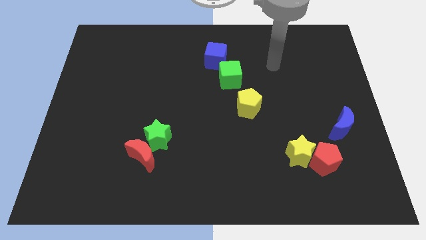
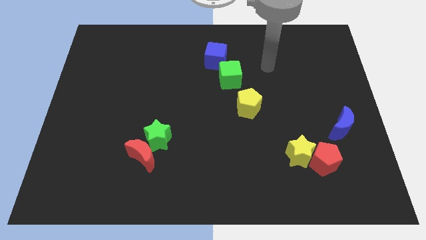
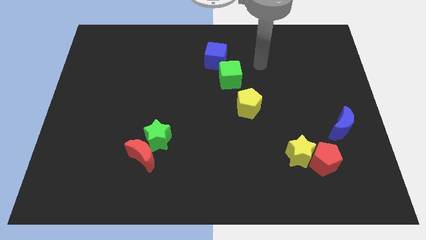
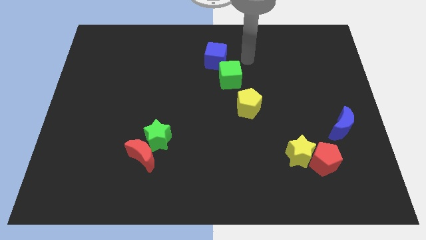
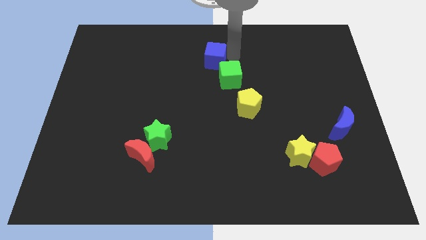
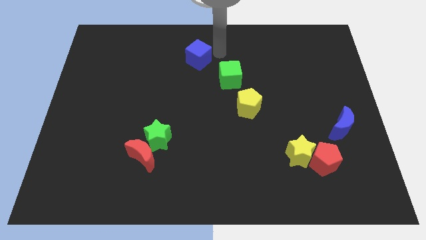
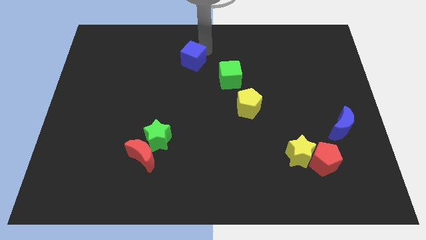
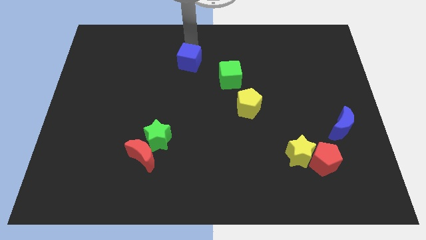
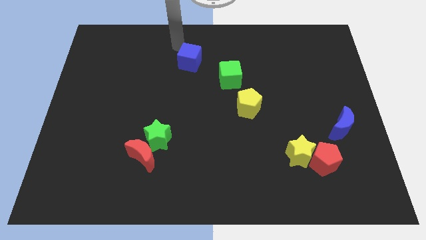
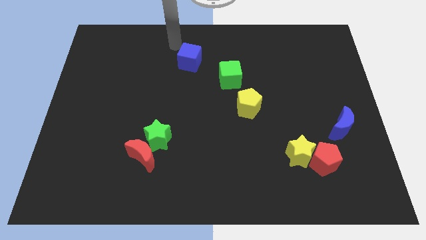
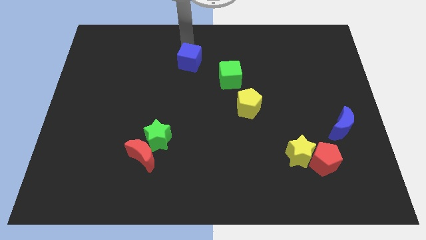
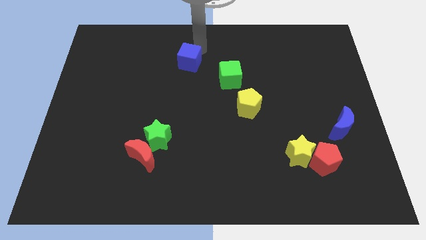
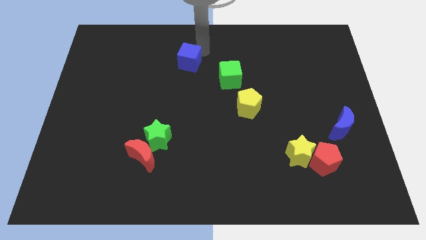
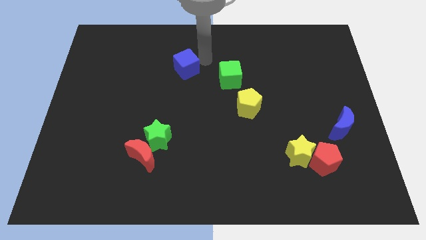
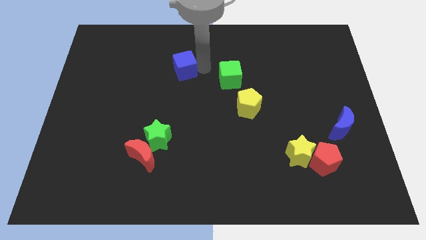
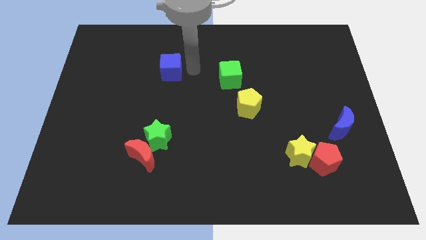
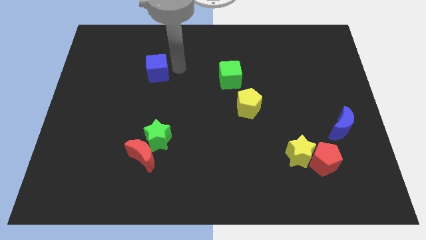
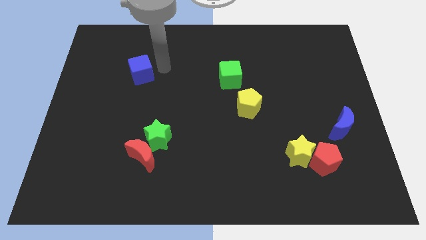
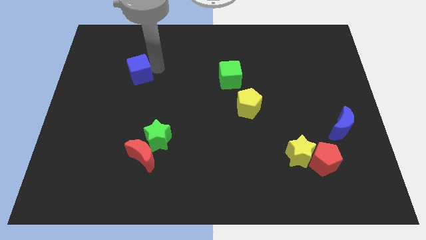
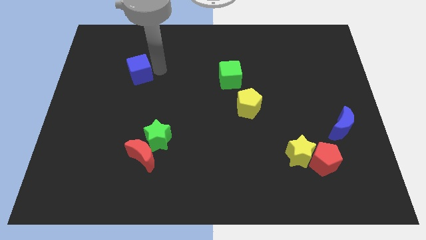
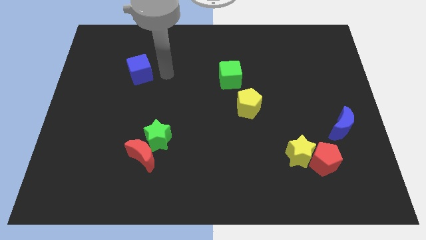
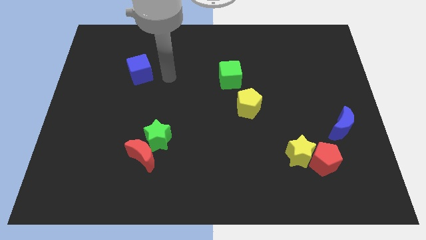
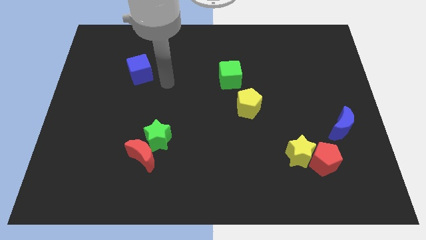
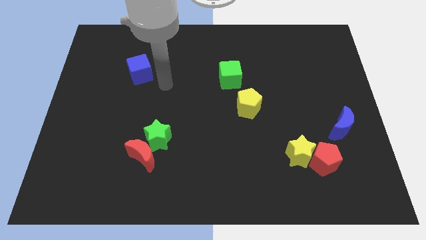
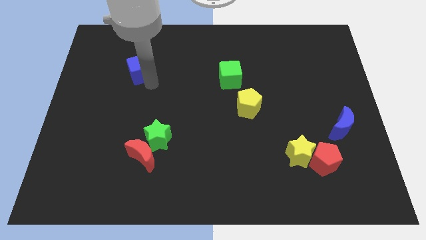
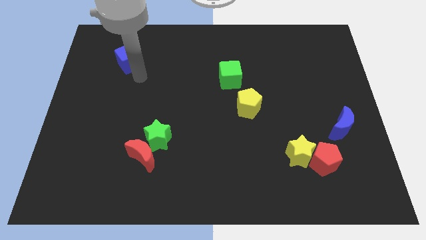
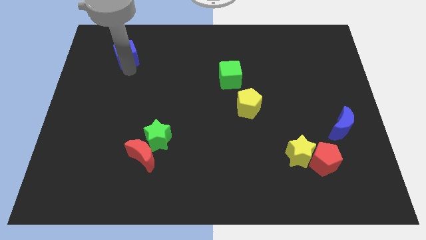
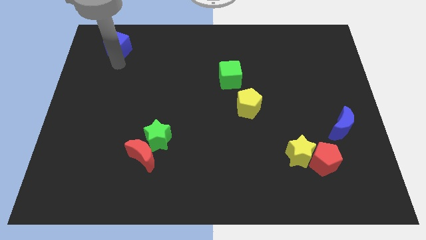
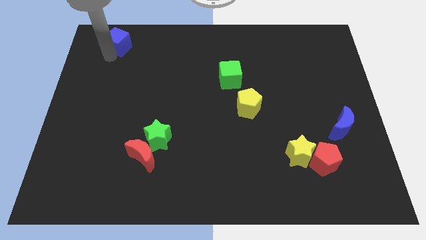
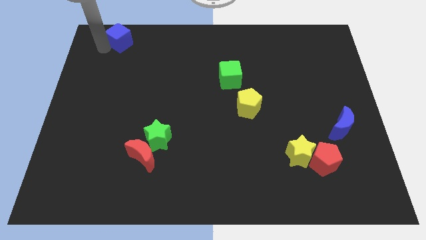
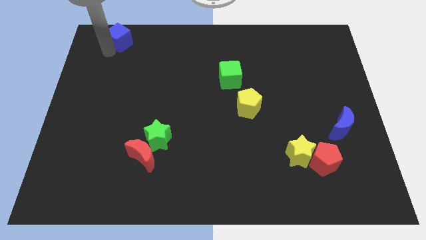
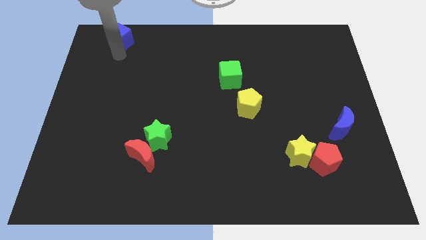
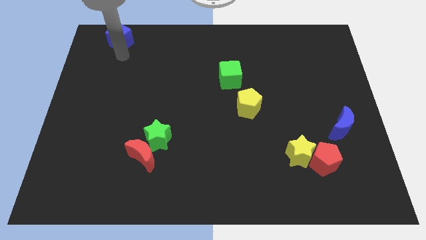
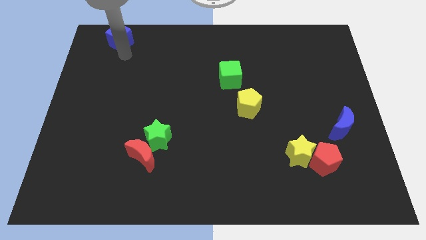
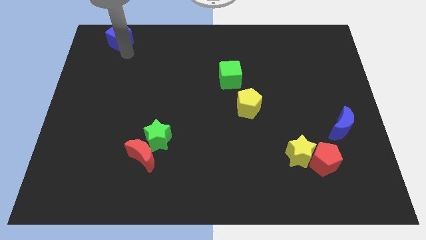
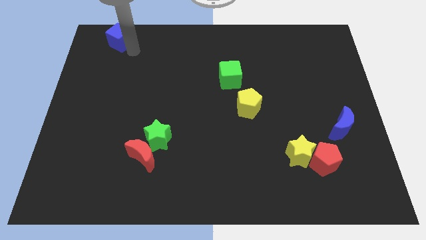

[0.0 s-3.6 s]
push the blue cube towards the top left corner of the board

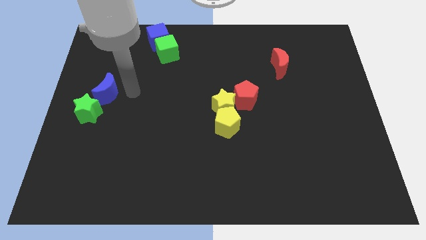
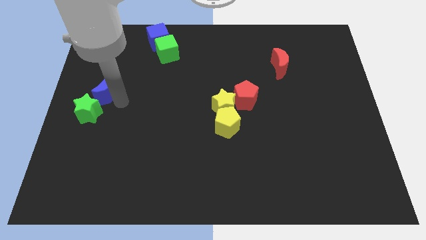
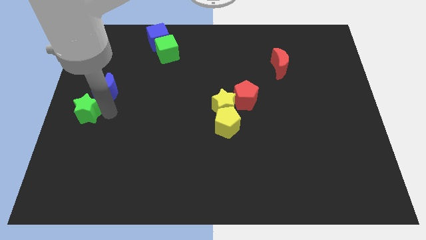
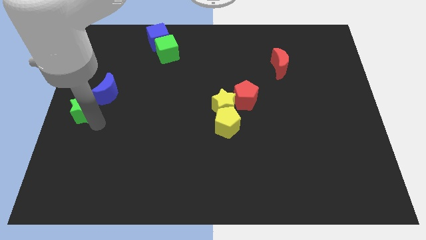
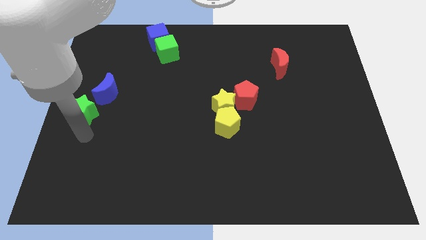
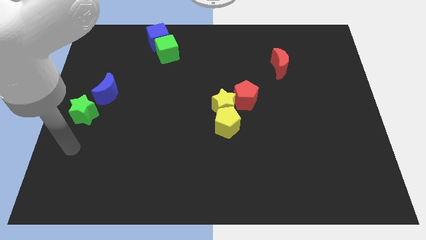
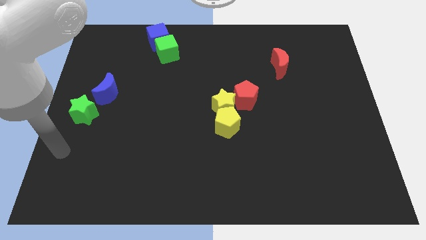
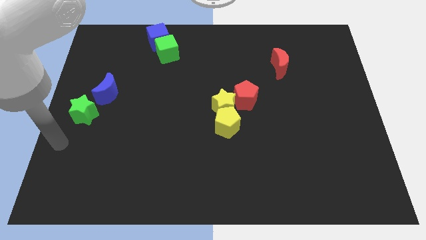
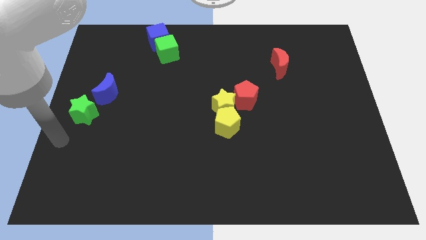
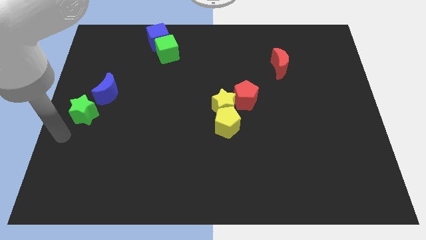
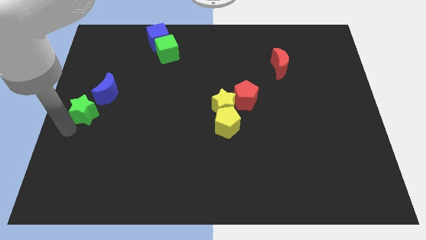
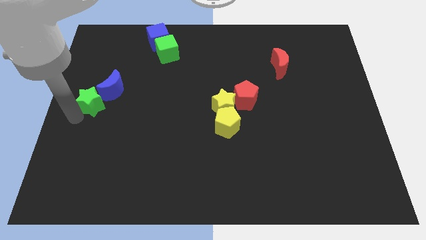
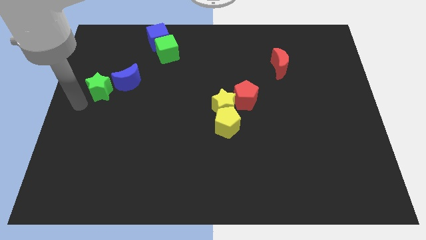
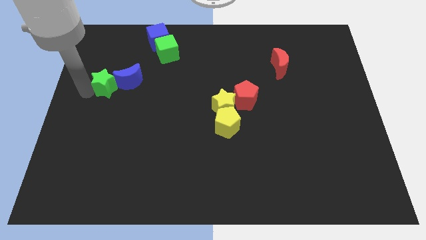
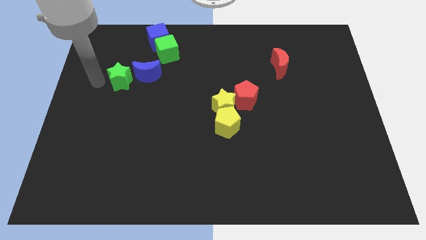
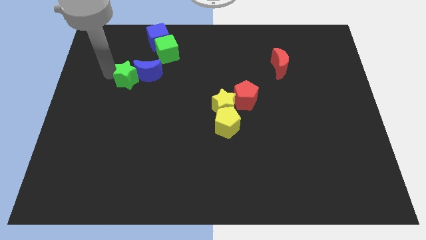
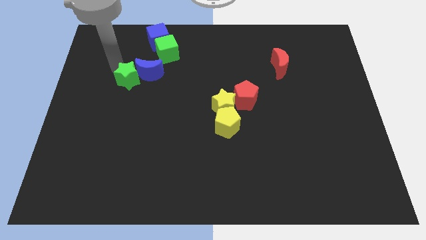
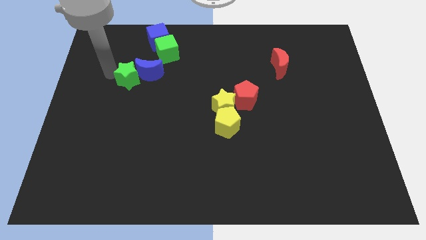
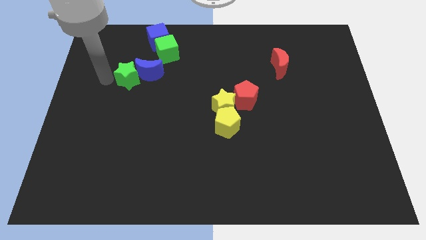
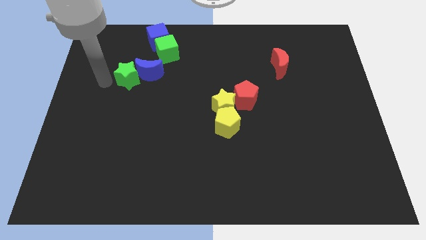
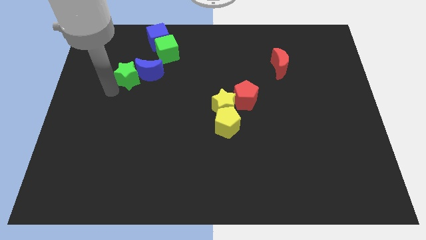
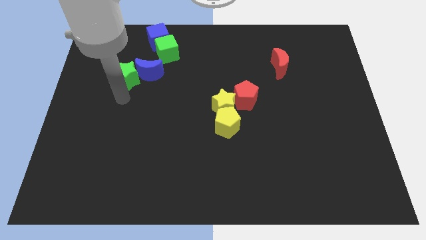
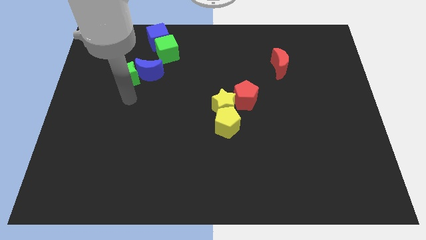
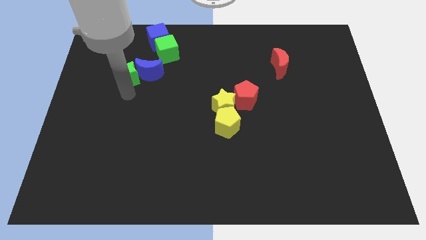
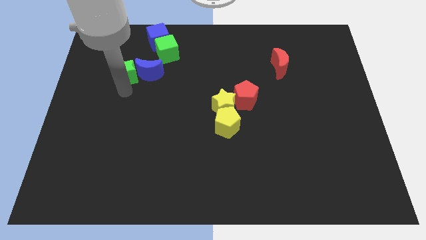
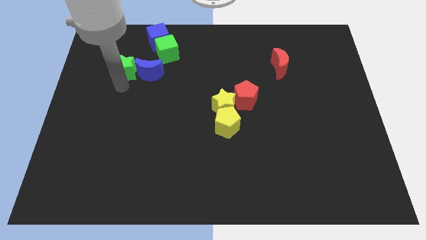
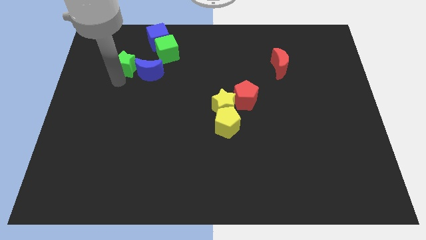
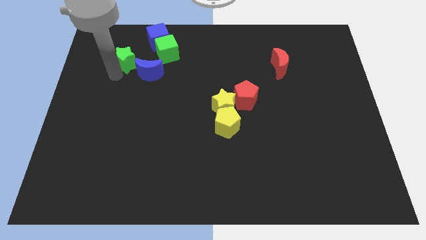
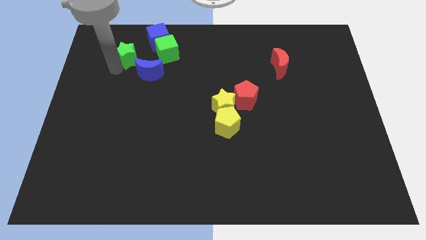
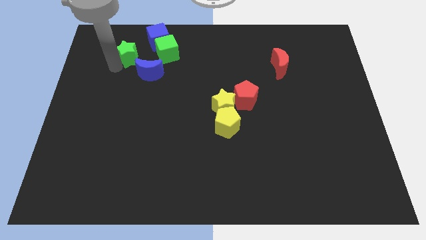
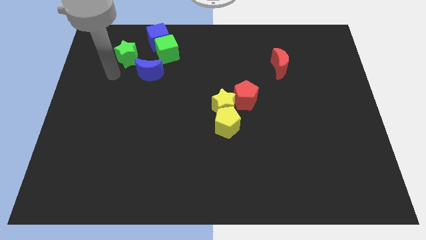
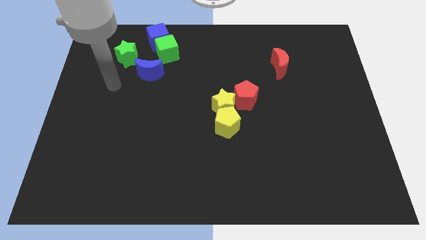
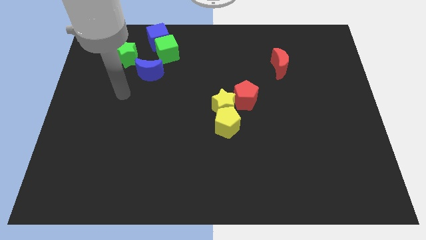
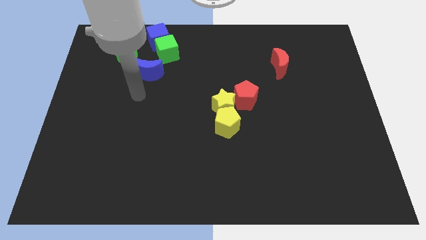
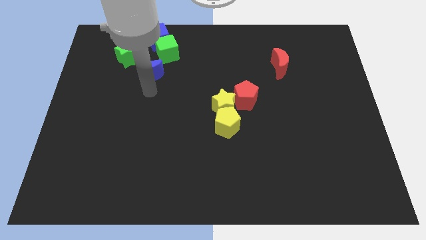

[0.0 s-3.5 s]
put the blue crescent vertically below the blue cube and green star horizontally to the left side of the green cube

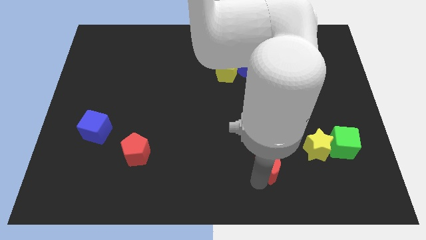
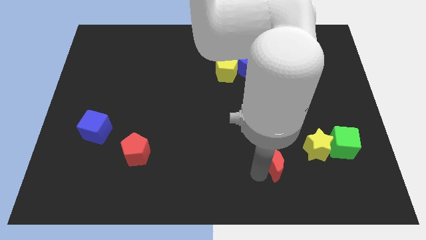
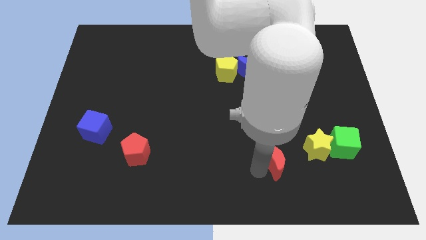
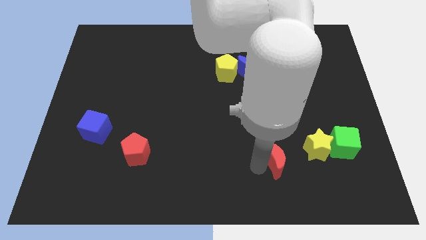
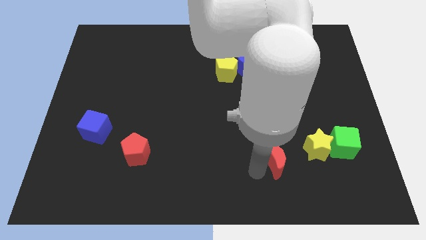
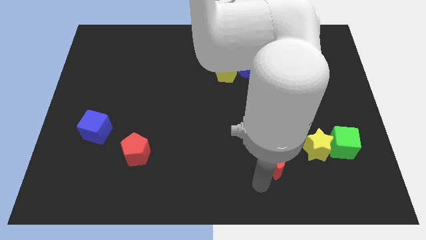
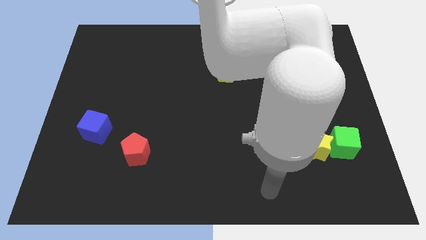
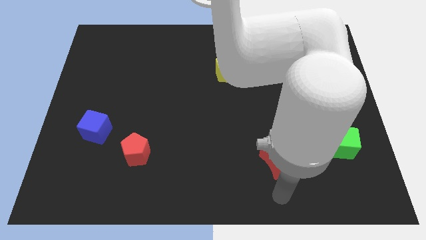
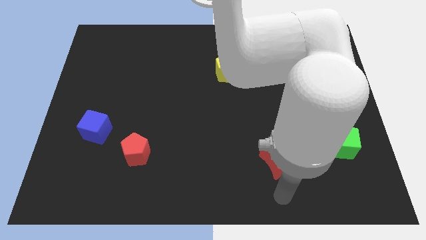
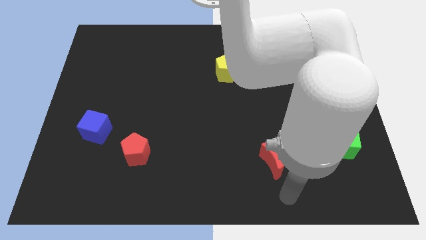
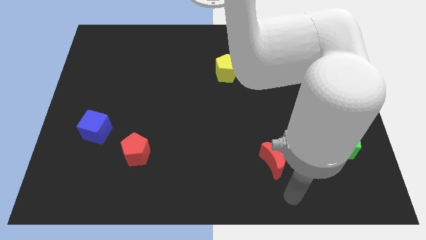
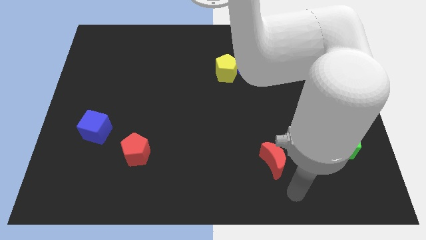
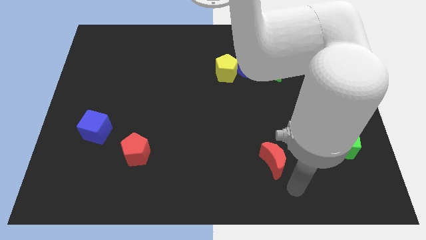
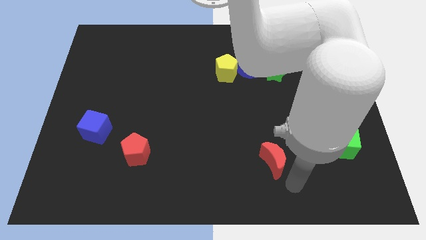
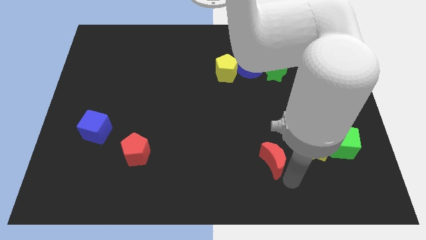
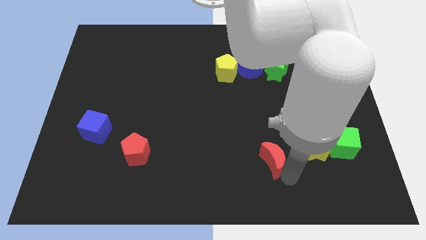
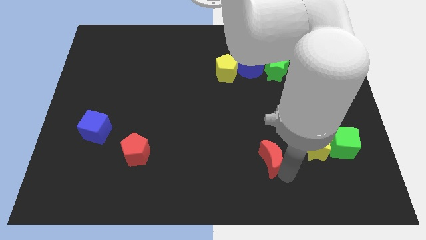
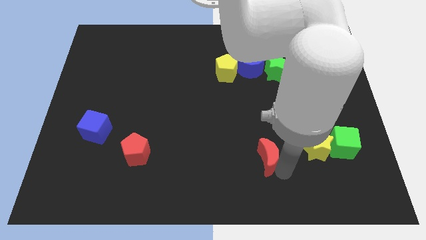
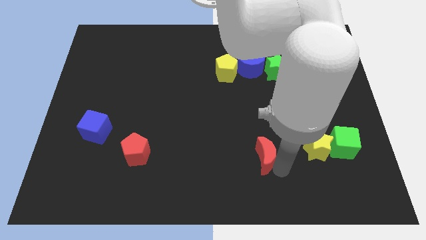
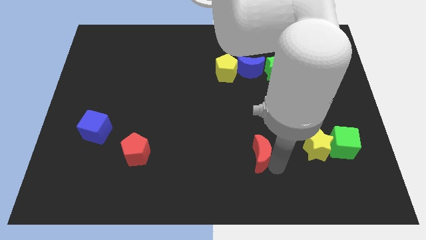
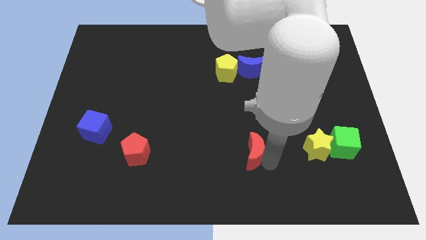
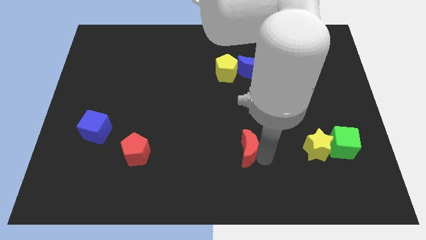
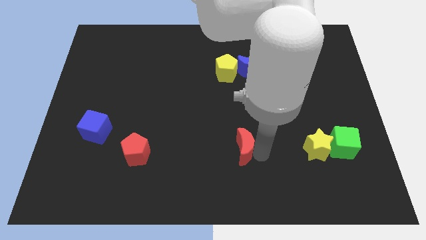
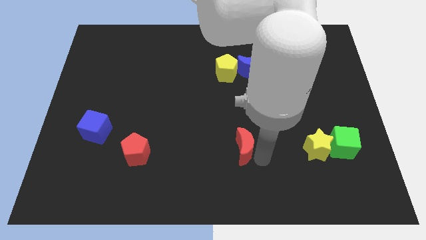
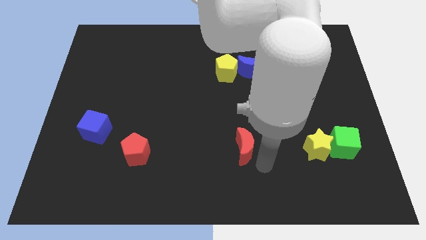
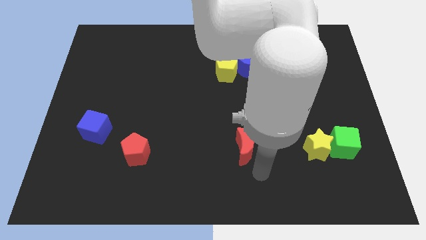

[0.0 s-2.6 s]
push the red moon to the bottom side the yellow pentagon
